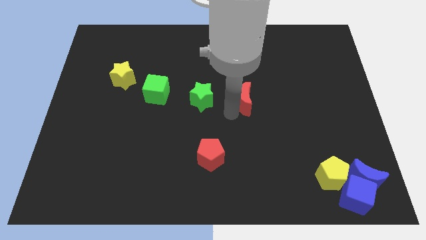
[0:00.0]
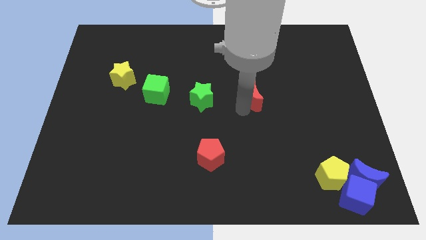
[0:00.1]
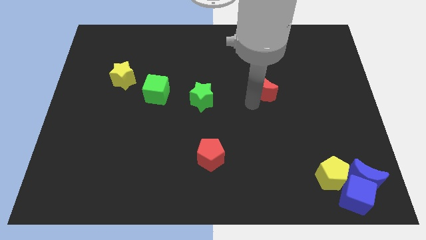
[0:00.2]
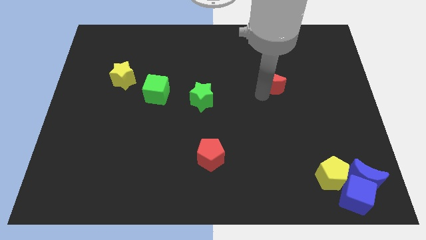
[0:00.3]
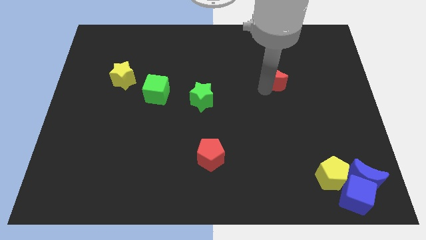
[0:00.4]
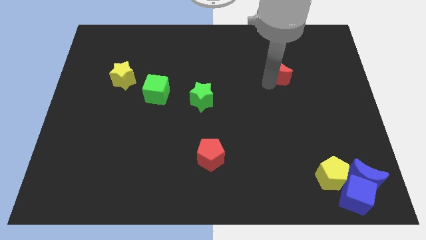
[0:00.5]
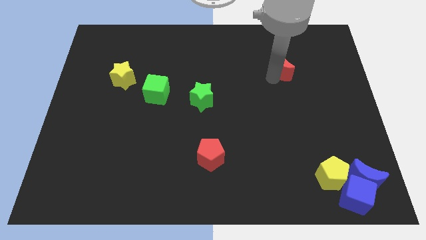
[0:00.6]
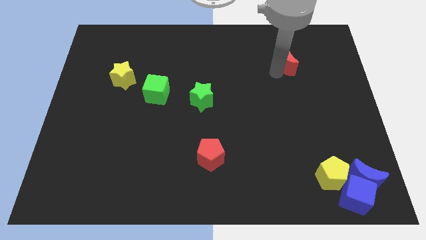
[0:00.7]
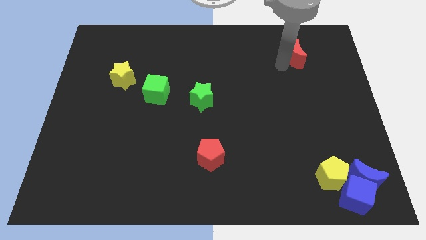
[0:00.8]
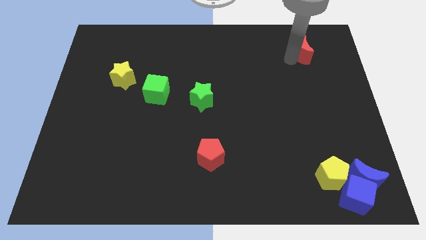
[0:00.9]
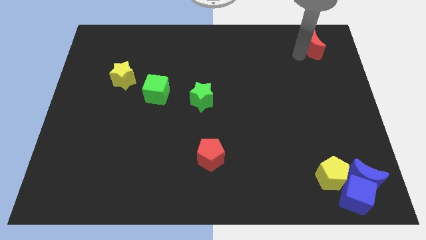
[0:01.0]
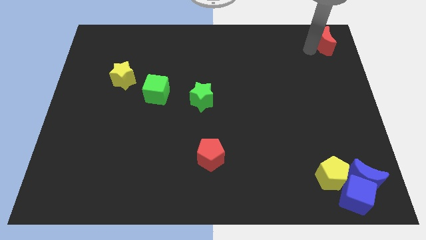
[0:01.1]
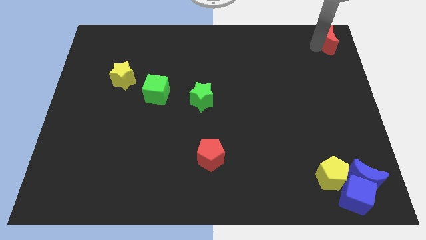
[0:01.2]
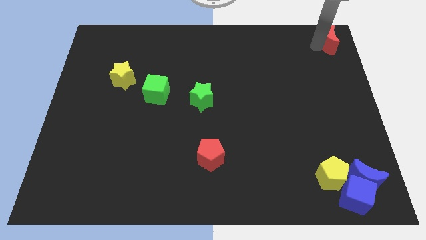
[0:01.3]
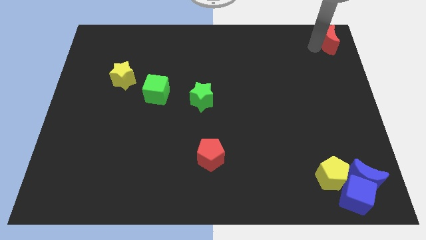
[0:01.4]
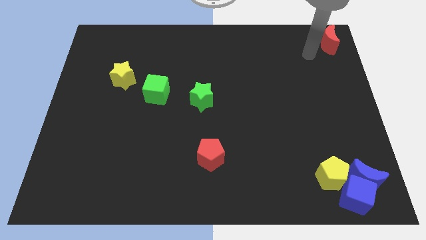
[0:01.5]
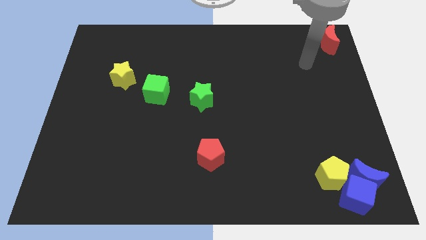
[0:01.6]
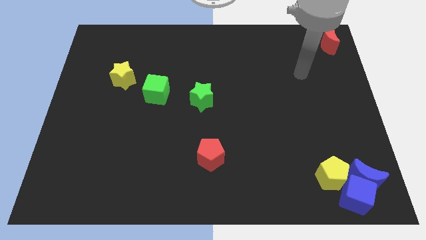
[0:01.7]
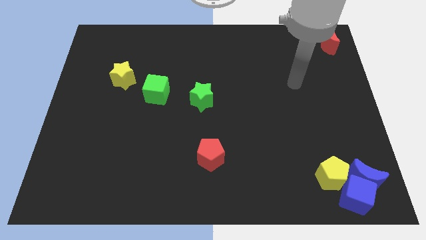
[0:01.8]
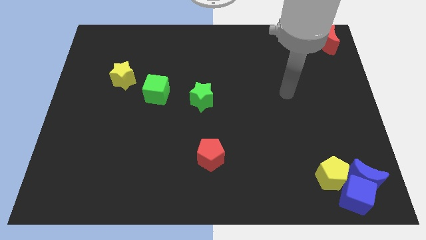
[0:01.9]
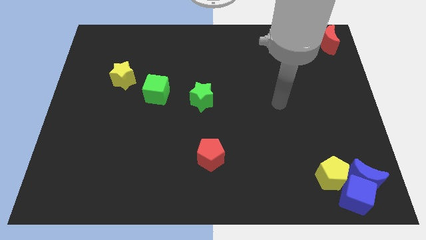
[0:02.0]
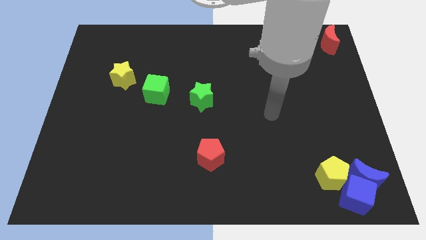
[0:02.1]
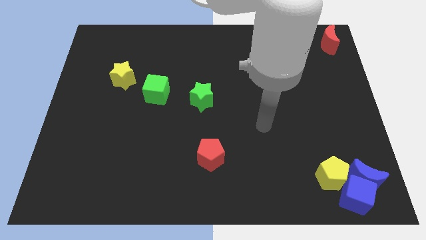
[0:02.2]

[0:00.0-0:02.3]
put the red moon at the top right corner

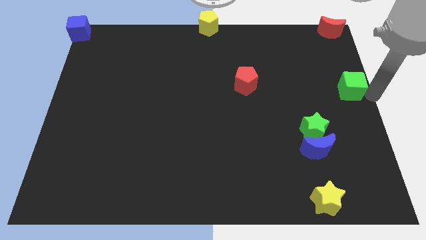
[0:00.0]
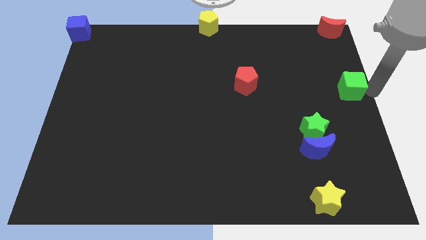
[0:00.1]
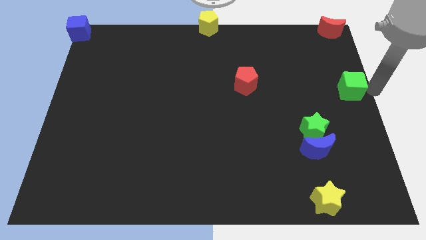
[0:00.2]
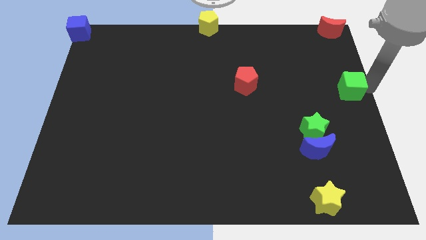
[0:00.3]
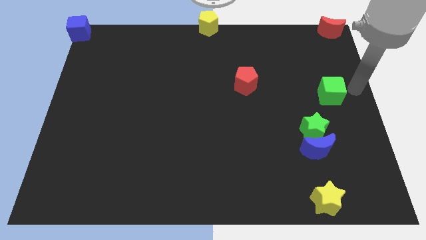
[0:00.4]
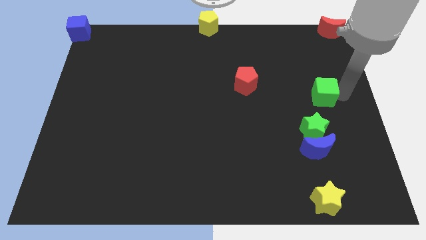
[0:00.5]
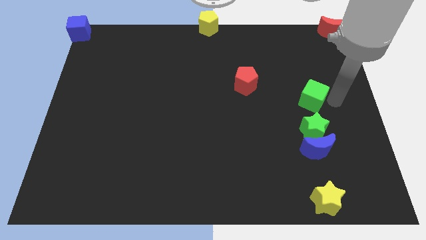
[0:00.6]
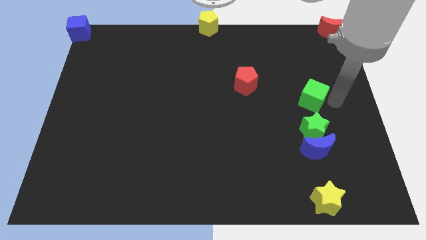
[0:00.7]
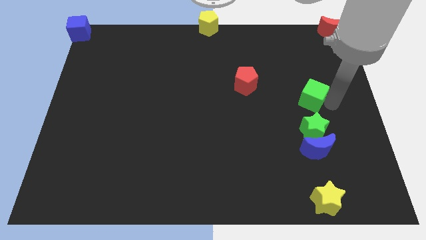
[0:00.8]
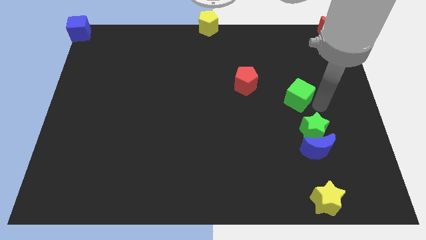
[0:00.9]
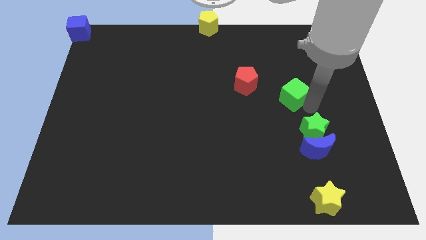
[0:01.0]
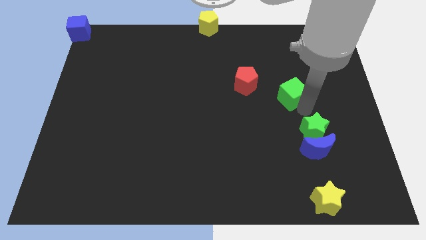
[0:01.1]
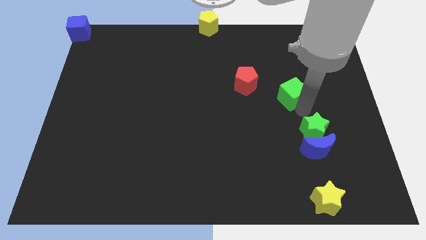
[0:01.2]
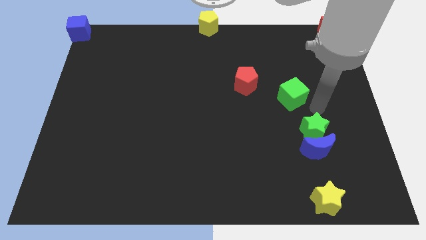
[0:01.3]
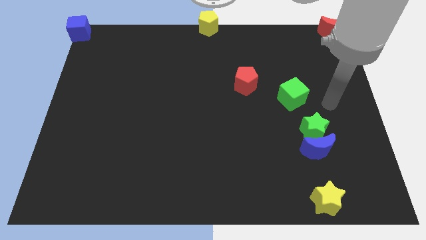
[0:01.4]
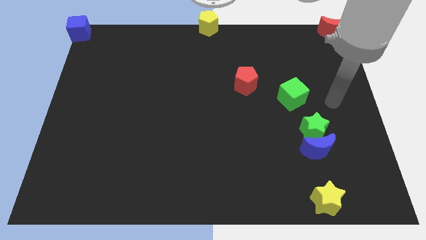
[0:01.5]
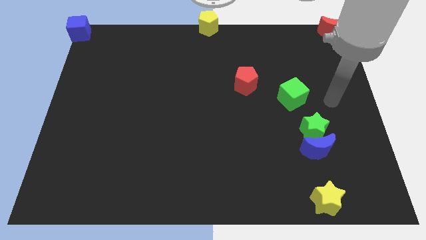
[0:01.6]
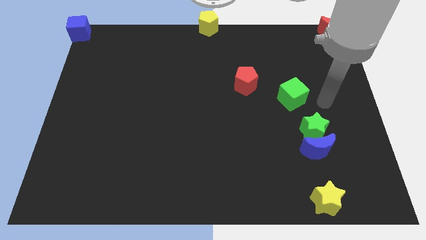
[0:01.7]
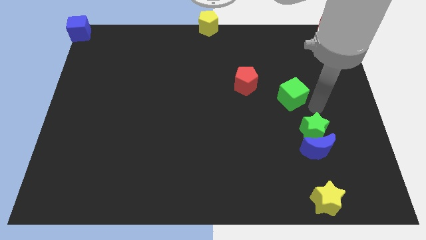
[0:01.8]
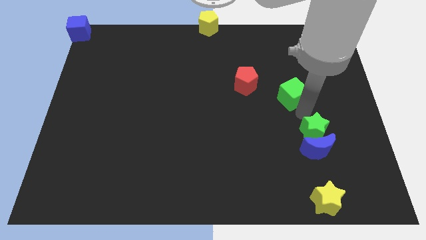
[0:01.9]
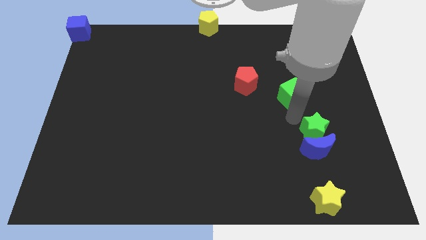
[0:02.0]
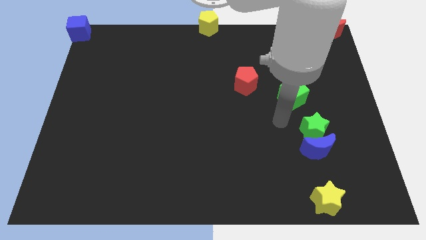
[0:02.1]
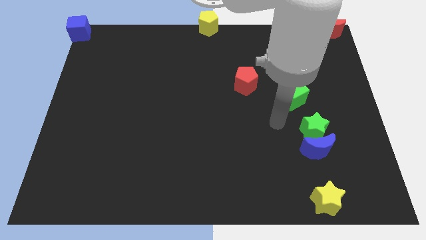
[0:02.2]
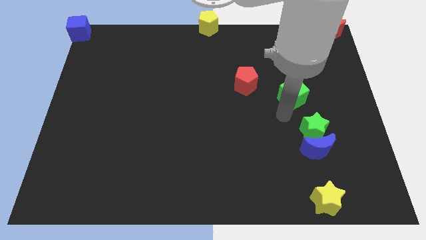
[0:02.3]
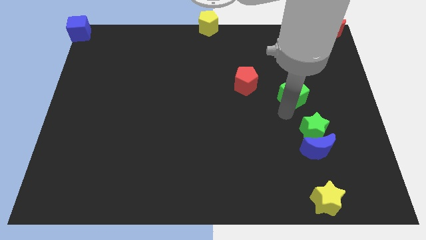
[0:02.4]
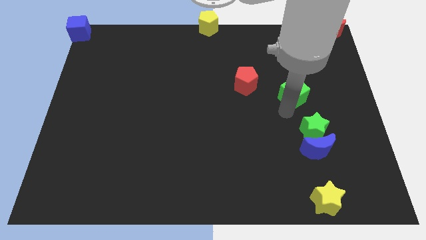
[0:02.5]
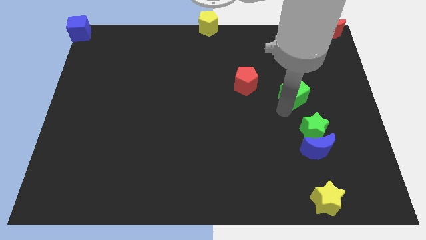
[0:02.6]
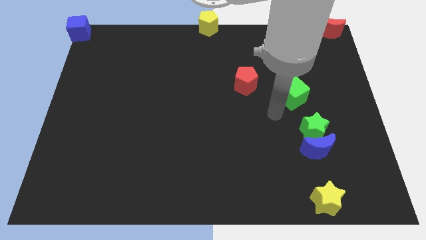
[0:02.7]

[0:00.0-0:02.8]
move the green cube right to the red pentagon

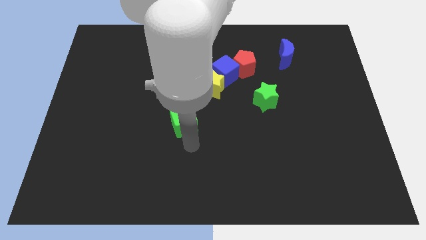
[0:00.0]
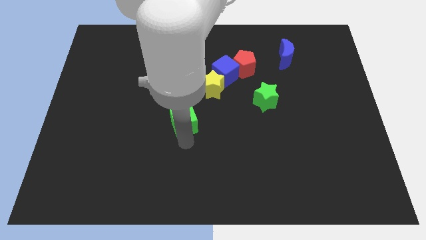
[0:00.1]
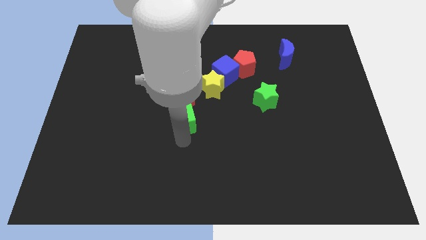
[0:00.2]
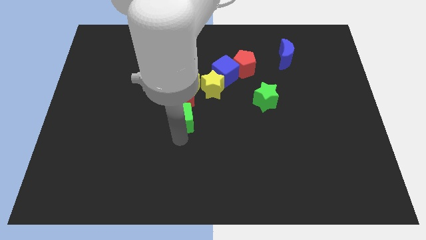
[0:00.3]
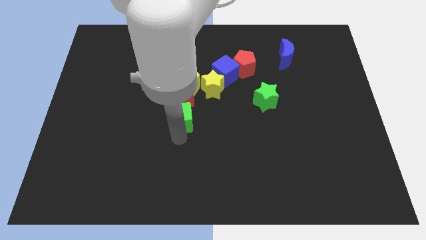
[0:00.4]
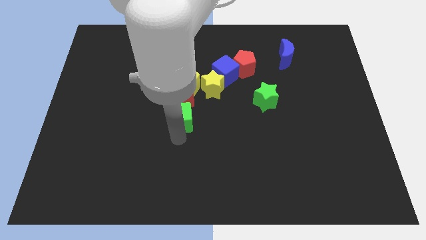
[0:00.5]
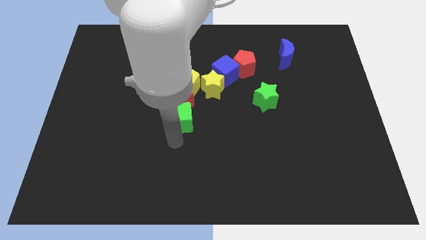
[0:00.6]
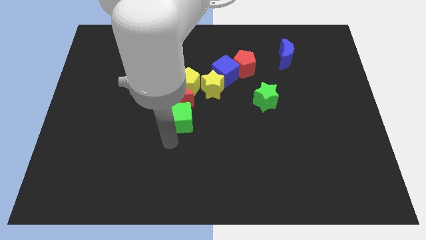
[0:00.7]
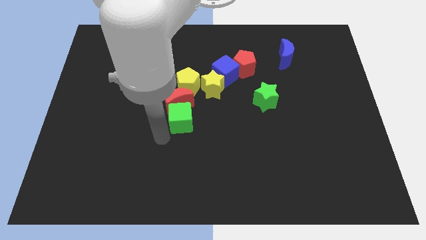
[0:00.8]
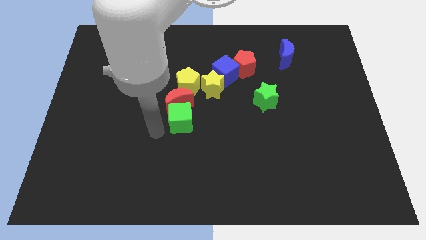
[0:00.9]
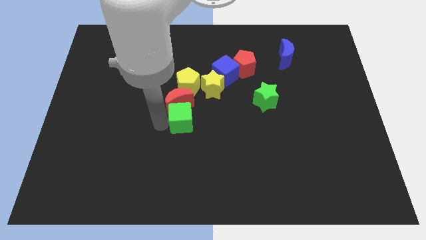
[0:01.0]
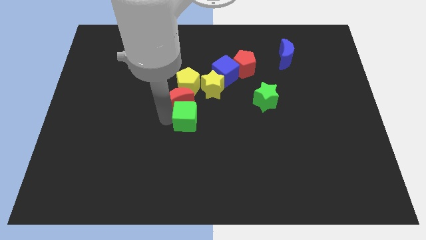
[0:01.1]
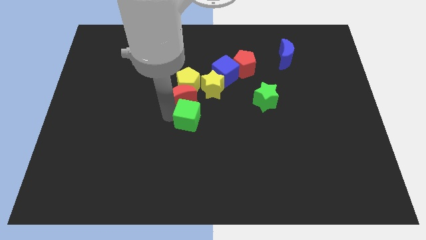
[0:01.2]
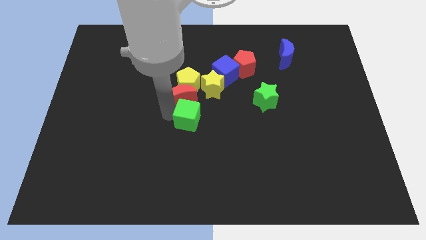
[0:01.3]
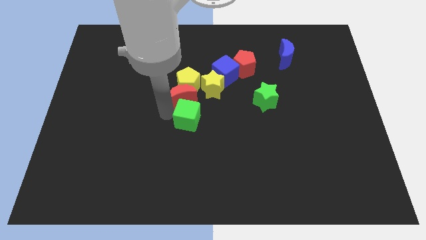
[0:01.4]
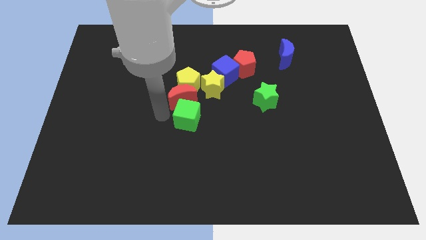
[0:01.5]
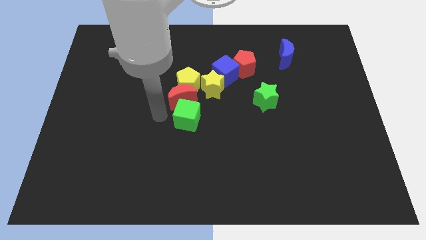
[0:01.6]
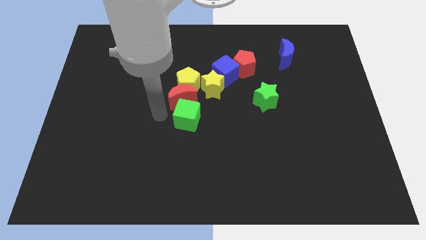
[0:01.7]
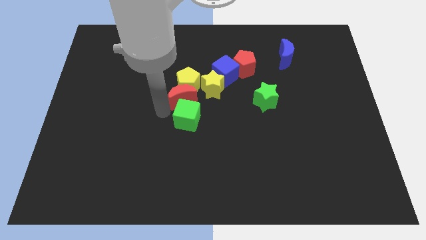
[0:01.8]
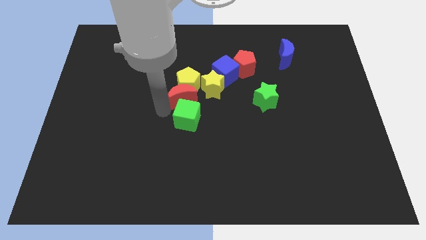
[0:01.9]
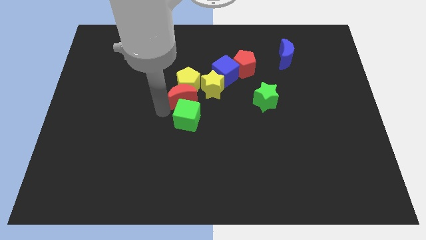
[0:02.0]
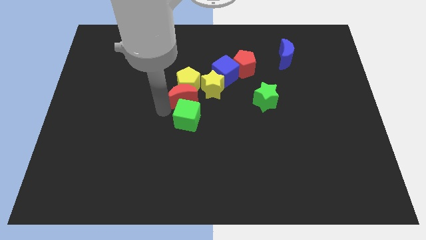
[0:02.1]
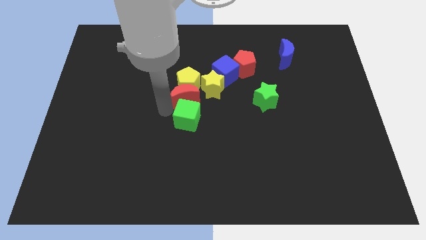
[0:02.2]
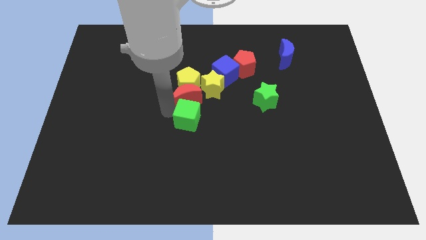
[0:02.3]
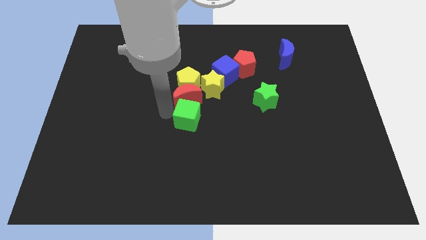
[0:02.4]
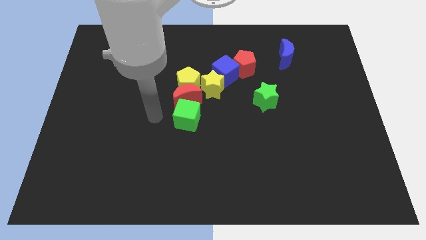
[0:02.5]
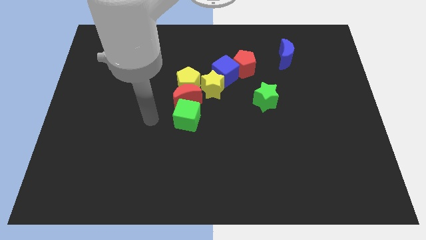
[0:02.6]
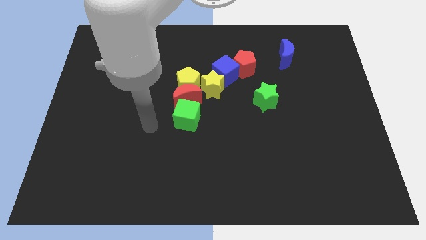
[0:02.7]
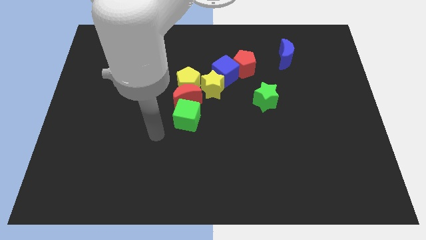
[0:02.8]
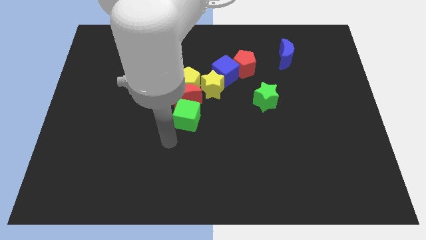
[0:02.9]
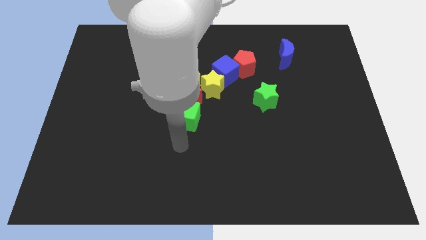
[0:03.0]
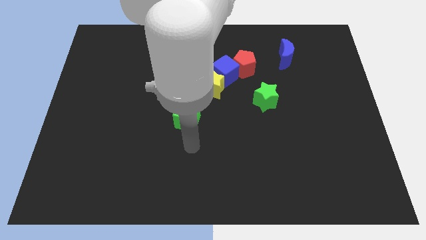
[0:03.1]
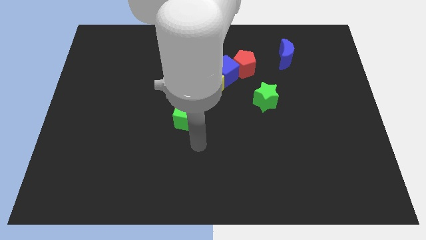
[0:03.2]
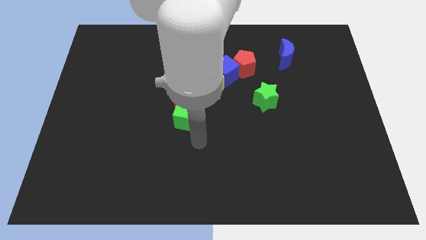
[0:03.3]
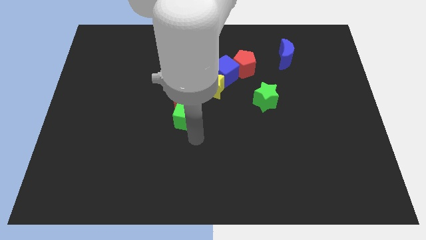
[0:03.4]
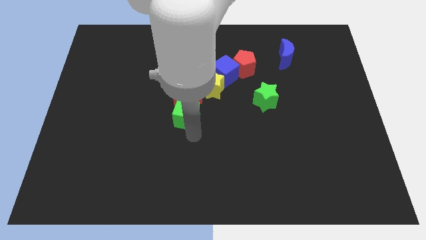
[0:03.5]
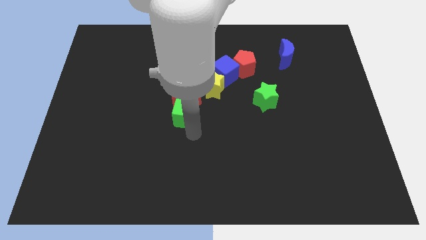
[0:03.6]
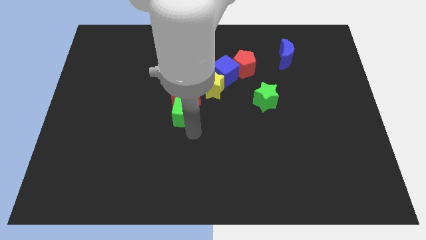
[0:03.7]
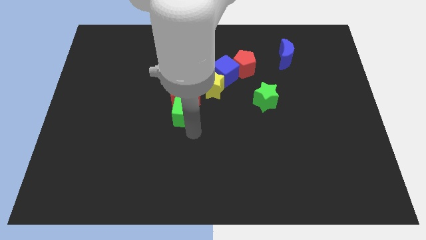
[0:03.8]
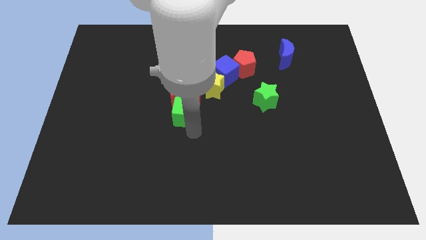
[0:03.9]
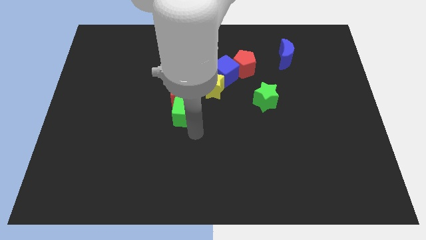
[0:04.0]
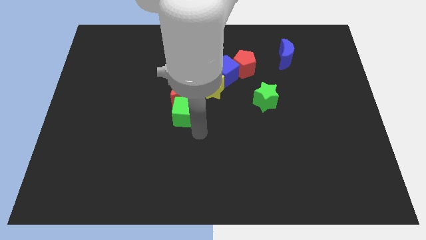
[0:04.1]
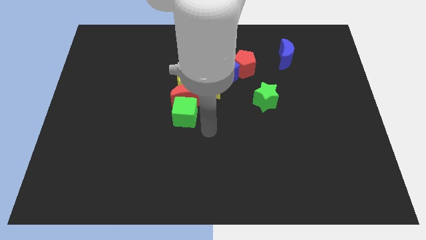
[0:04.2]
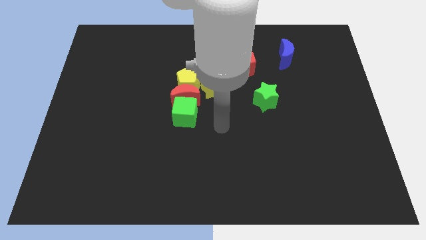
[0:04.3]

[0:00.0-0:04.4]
push the green cube below the red crescent
